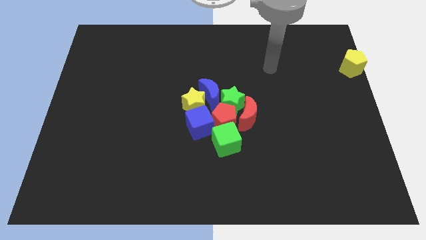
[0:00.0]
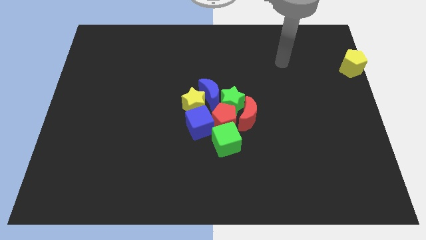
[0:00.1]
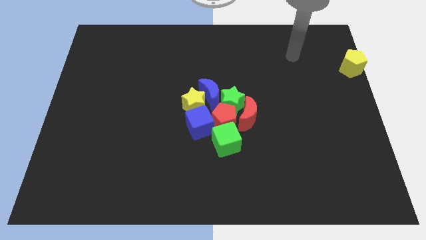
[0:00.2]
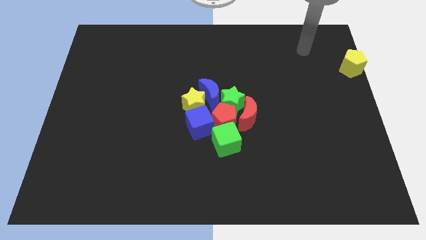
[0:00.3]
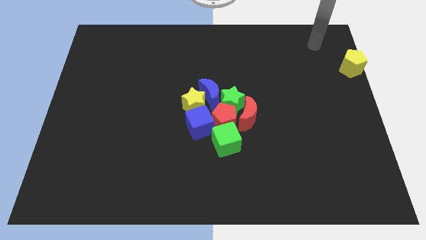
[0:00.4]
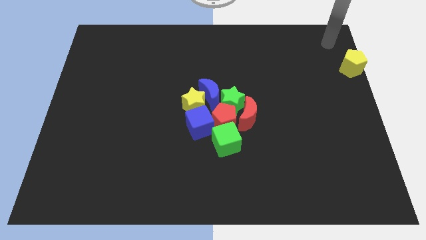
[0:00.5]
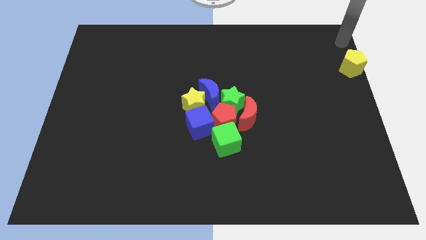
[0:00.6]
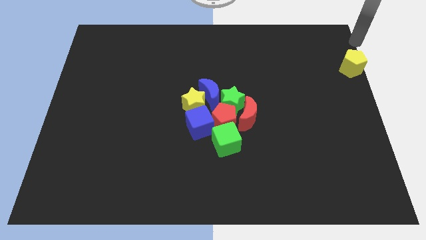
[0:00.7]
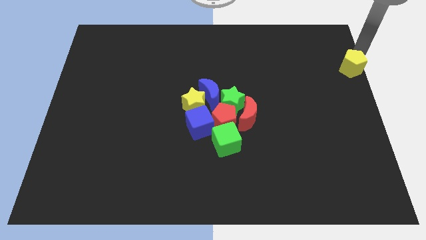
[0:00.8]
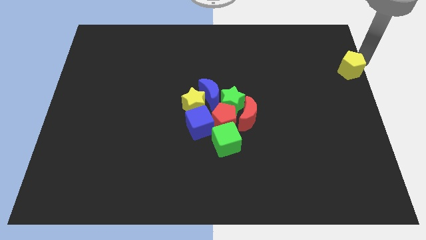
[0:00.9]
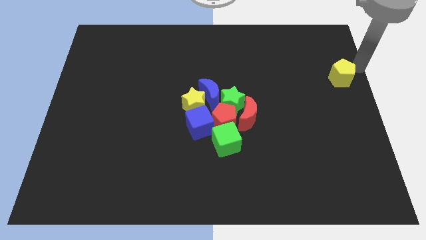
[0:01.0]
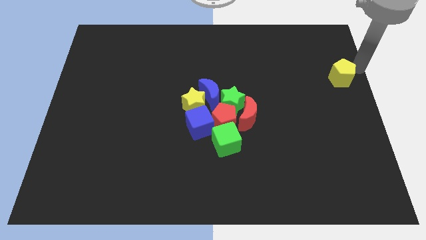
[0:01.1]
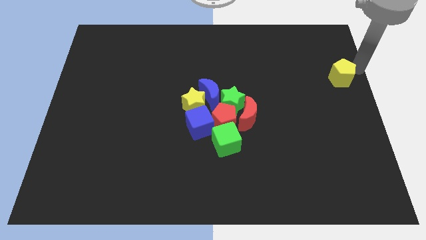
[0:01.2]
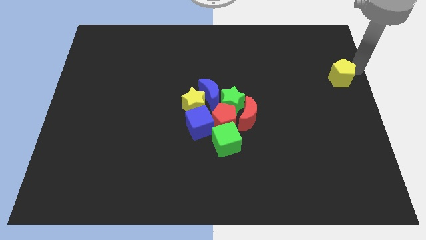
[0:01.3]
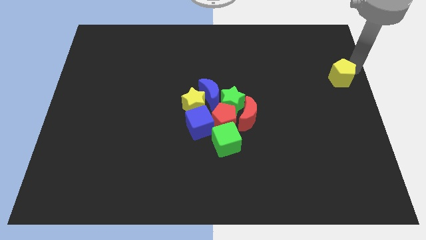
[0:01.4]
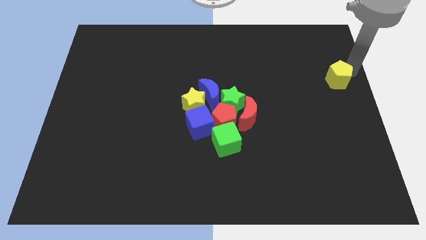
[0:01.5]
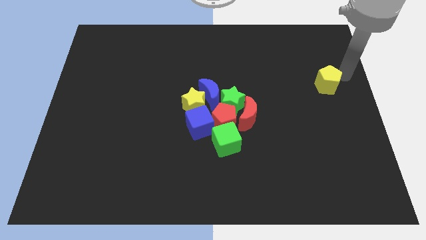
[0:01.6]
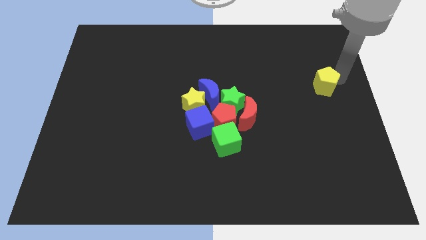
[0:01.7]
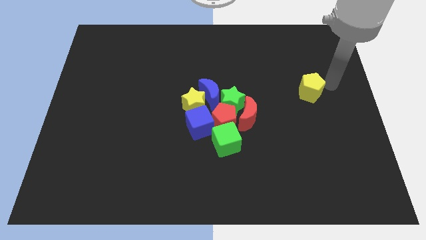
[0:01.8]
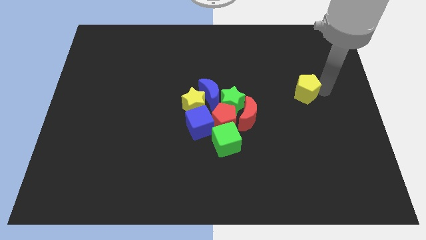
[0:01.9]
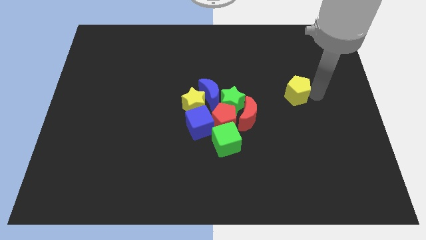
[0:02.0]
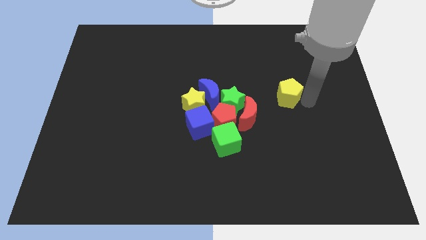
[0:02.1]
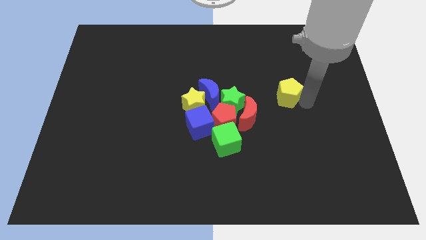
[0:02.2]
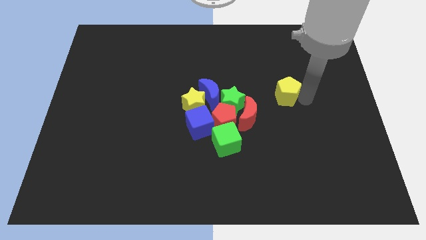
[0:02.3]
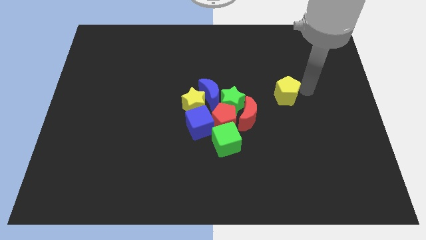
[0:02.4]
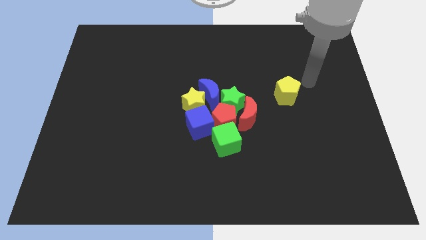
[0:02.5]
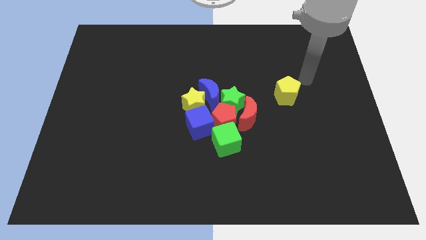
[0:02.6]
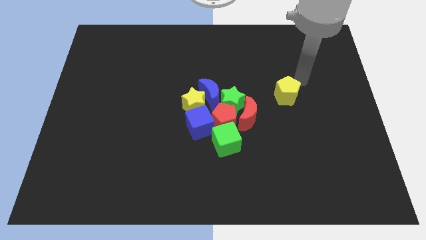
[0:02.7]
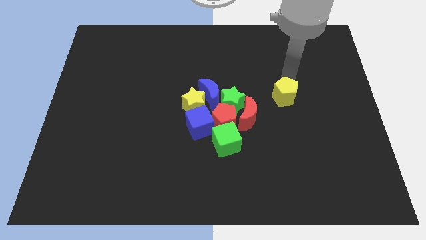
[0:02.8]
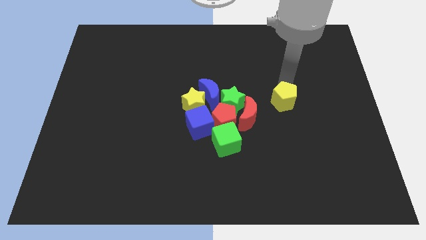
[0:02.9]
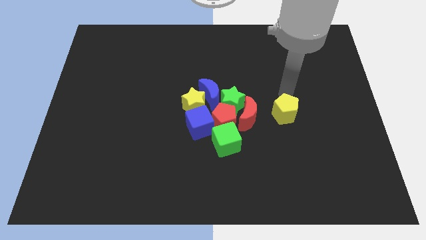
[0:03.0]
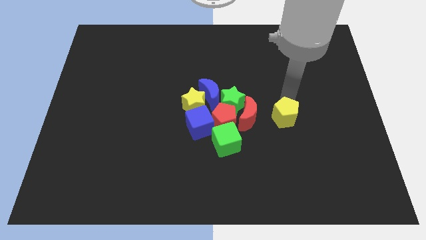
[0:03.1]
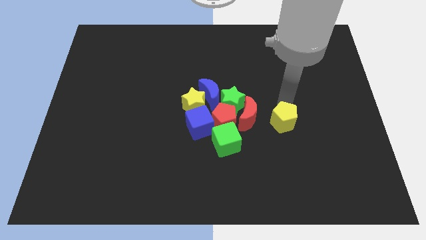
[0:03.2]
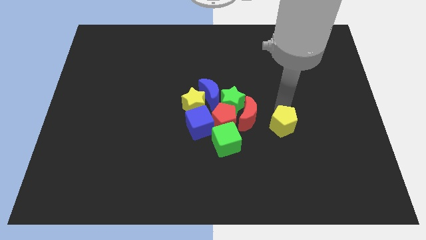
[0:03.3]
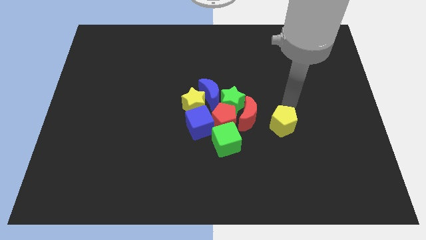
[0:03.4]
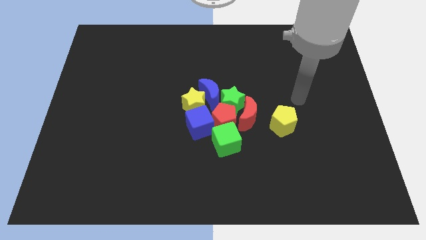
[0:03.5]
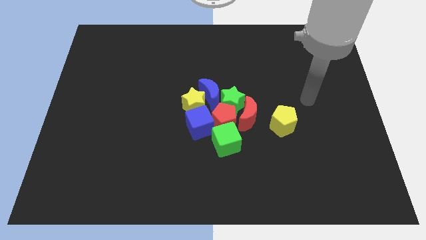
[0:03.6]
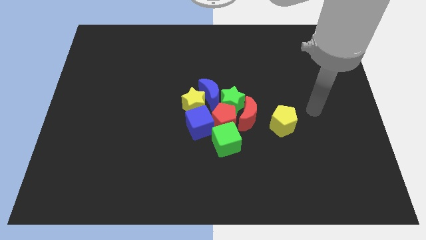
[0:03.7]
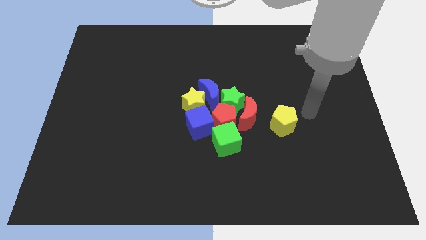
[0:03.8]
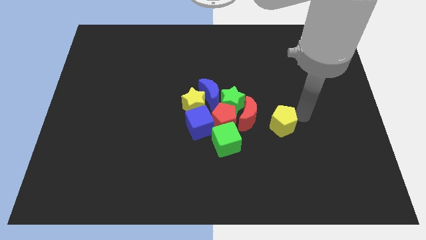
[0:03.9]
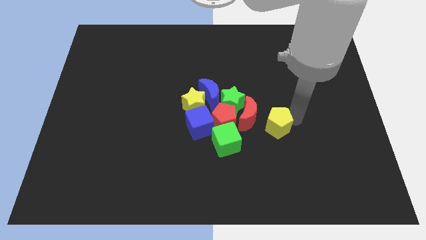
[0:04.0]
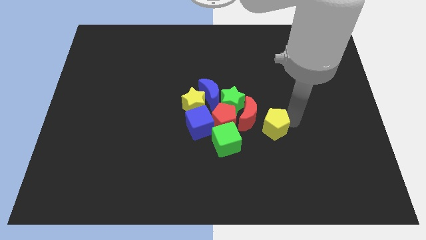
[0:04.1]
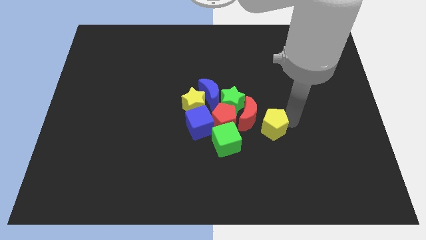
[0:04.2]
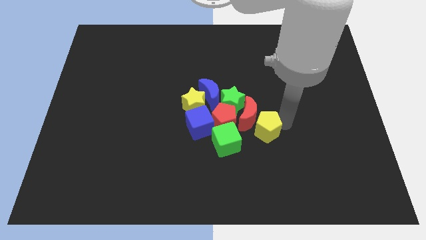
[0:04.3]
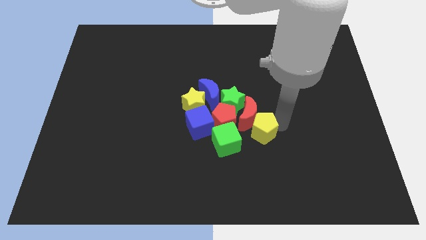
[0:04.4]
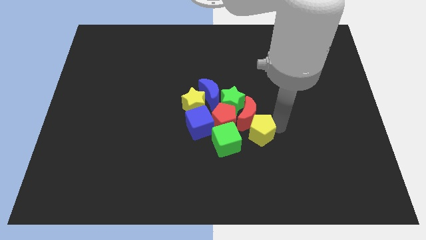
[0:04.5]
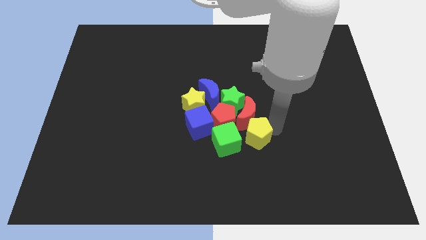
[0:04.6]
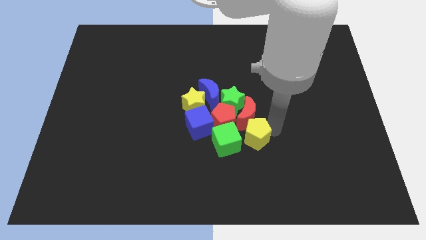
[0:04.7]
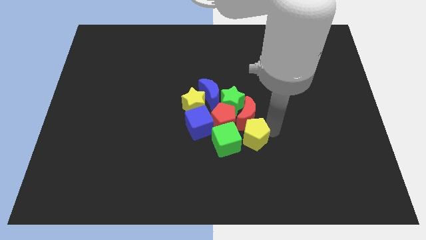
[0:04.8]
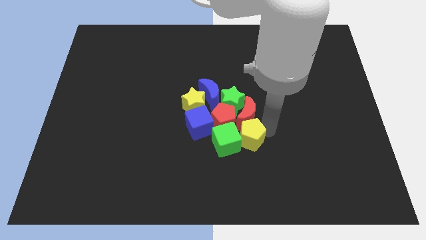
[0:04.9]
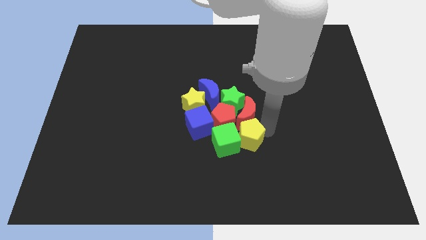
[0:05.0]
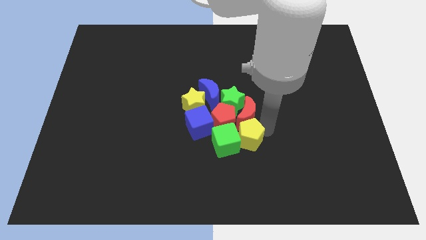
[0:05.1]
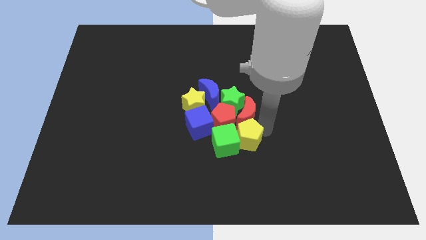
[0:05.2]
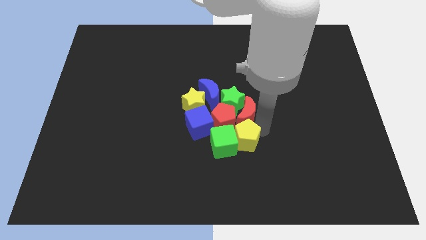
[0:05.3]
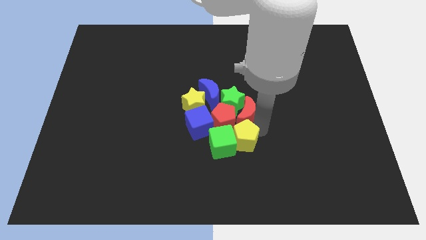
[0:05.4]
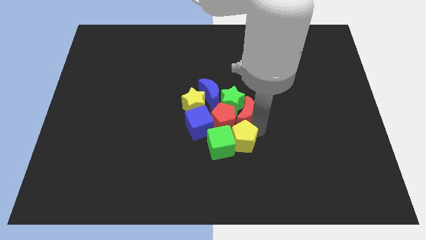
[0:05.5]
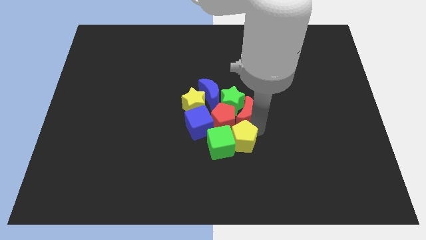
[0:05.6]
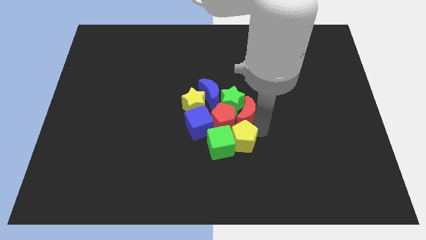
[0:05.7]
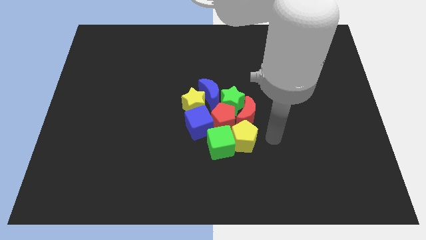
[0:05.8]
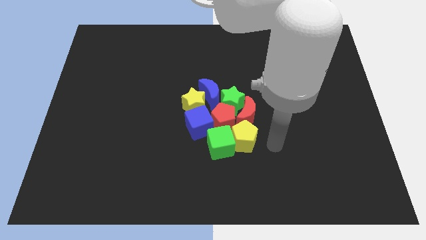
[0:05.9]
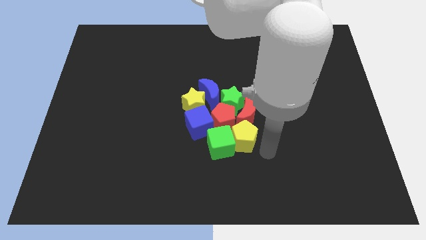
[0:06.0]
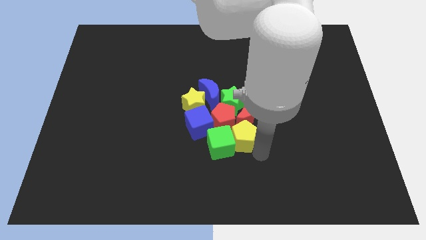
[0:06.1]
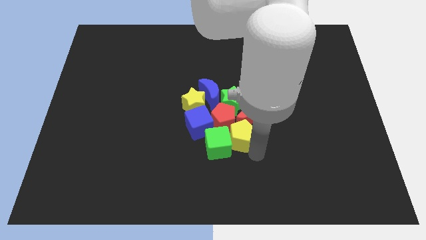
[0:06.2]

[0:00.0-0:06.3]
place the yellow pentagon to the right side of the green cube

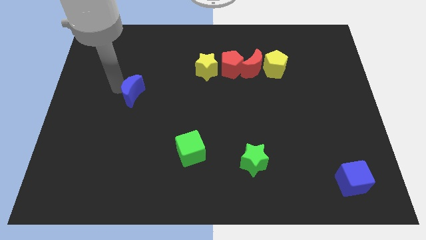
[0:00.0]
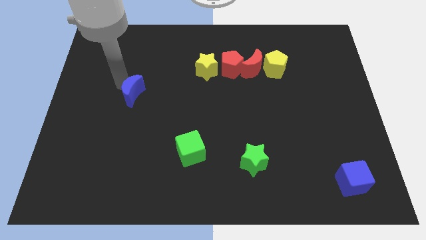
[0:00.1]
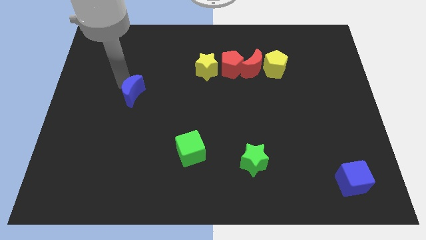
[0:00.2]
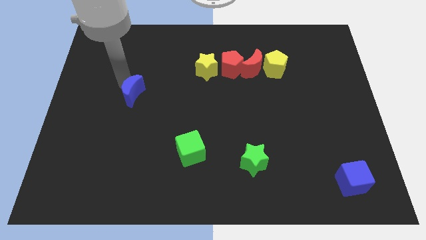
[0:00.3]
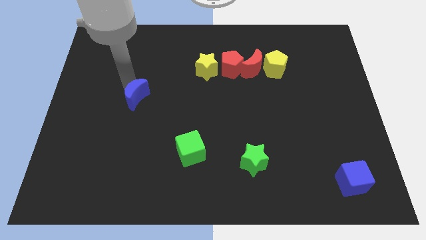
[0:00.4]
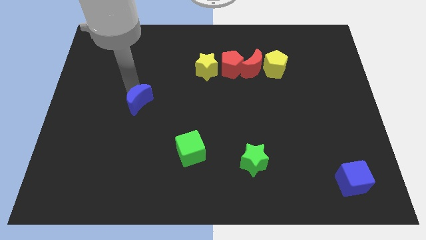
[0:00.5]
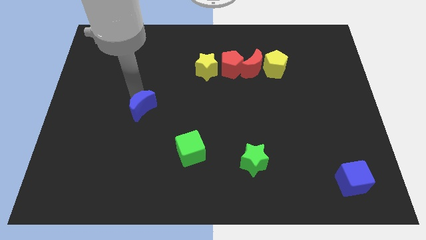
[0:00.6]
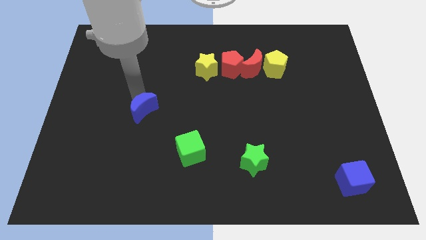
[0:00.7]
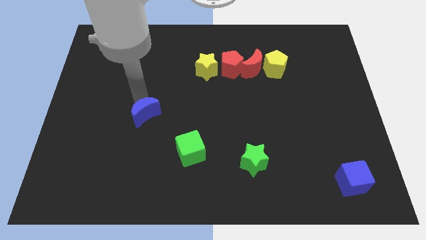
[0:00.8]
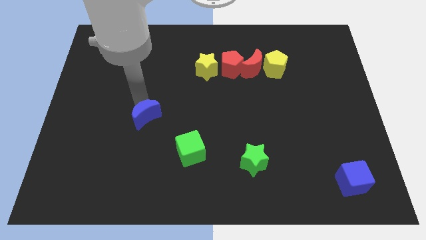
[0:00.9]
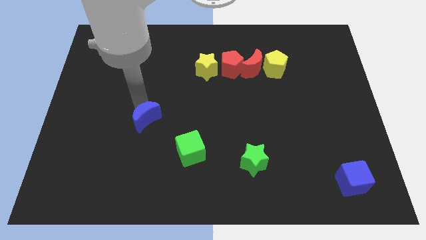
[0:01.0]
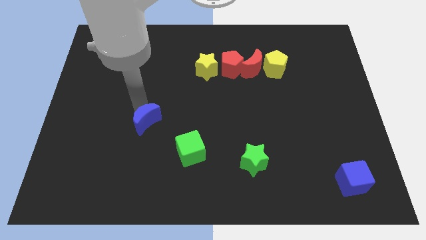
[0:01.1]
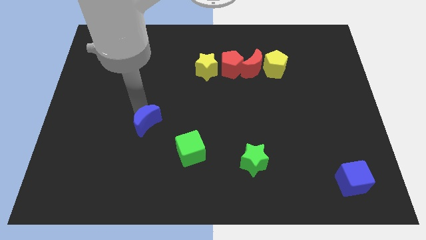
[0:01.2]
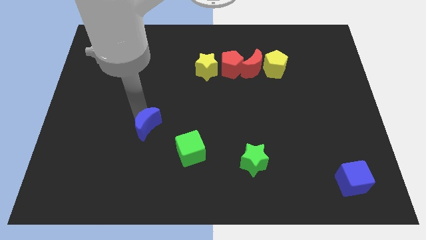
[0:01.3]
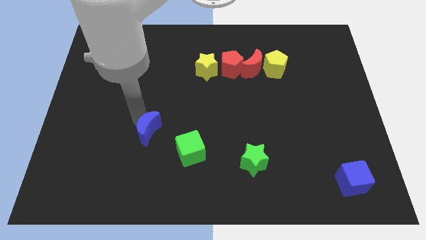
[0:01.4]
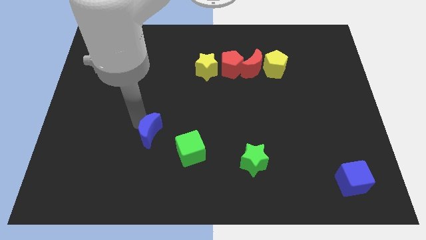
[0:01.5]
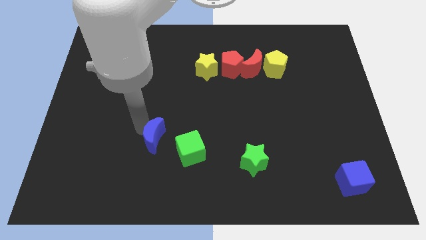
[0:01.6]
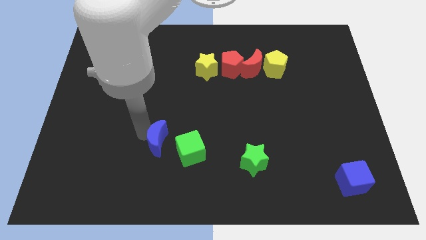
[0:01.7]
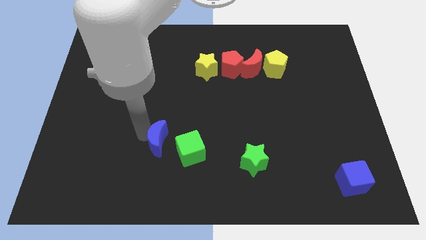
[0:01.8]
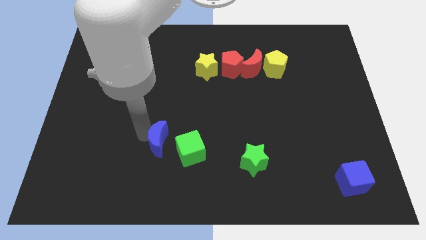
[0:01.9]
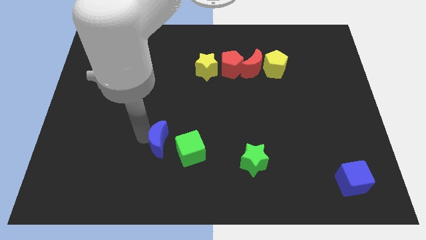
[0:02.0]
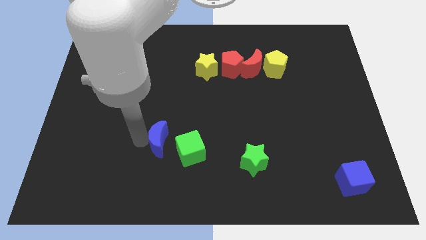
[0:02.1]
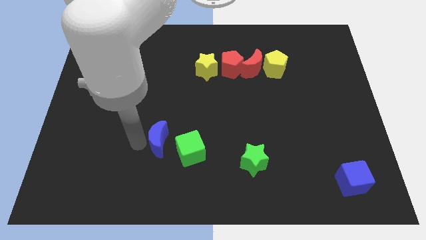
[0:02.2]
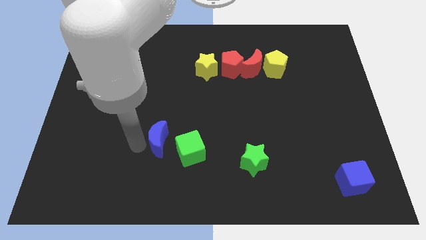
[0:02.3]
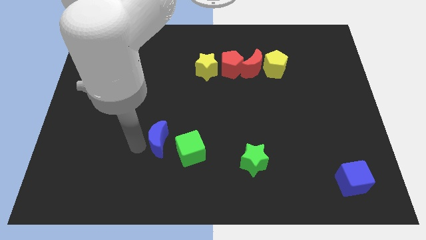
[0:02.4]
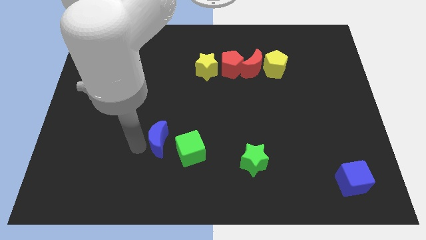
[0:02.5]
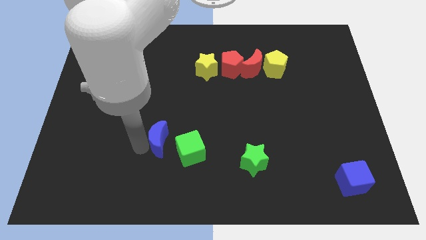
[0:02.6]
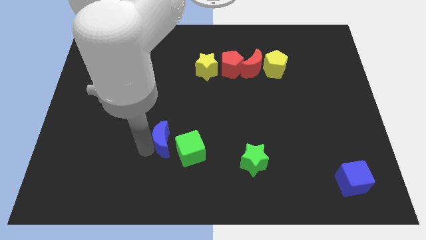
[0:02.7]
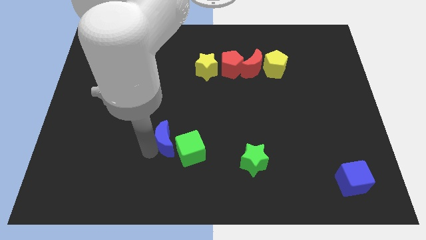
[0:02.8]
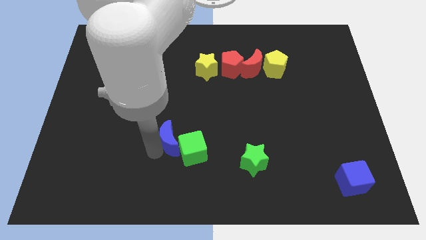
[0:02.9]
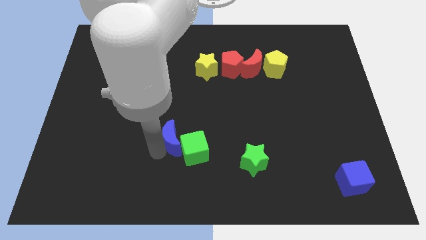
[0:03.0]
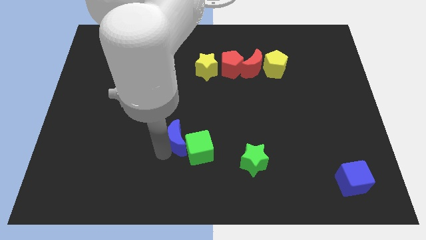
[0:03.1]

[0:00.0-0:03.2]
slide the blue crescent into the left side of the green cube
